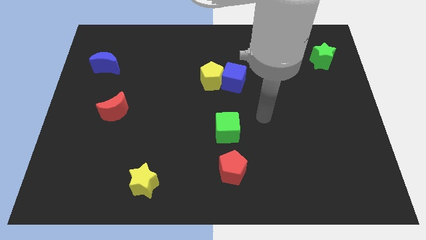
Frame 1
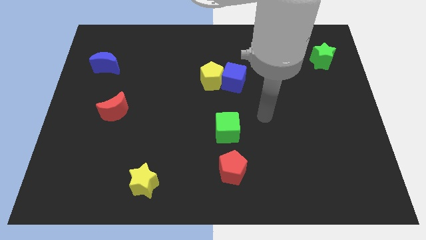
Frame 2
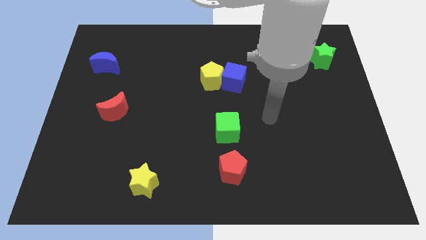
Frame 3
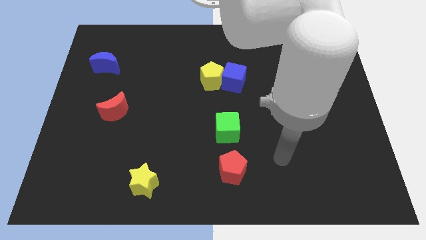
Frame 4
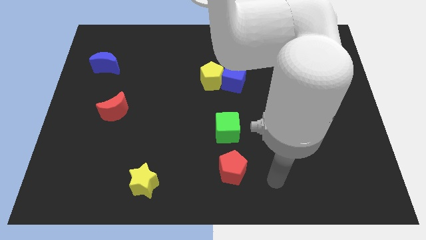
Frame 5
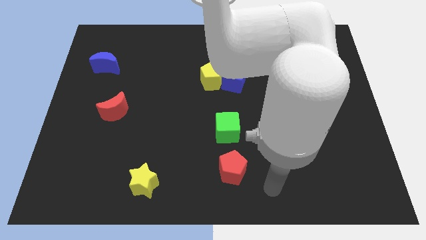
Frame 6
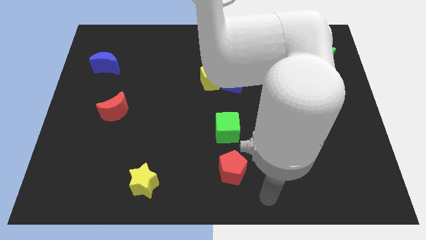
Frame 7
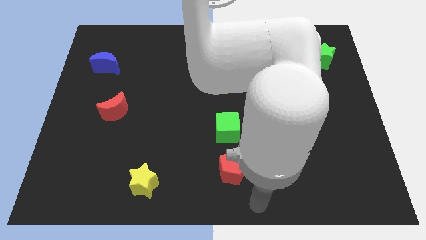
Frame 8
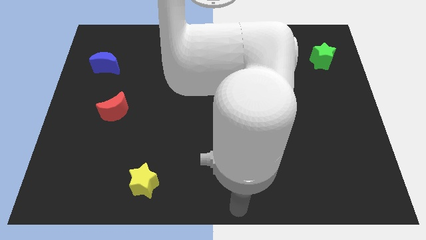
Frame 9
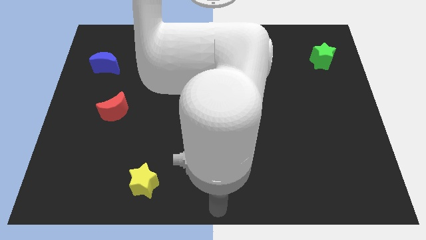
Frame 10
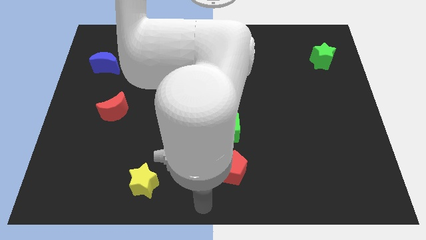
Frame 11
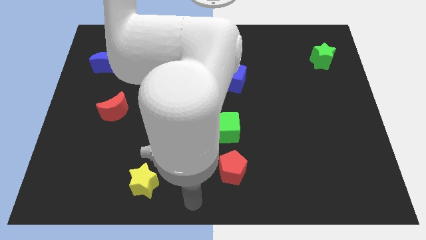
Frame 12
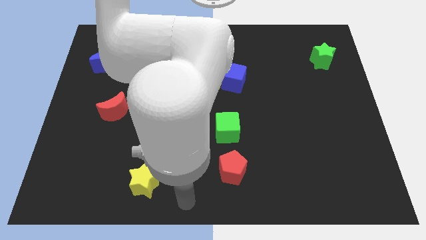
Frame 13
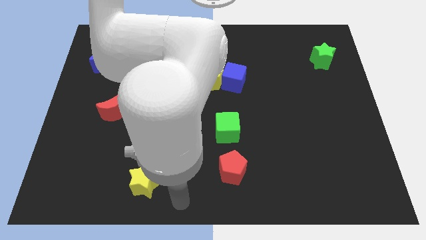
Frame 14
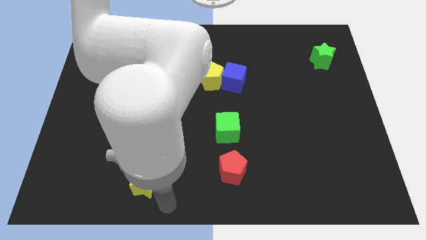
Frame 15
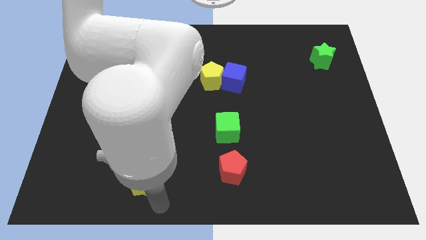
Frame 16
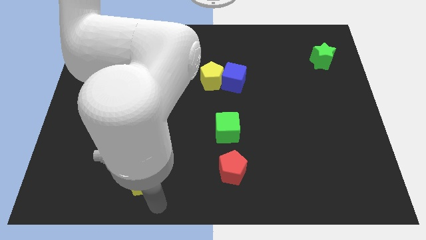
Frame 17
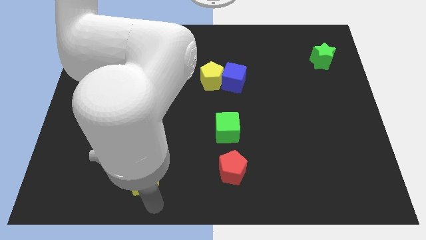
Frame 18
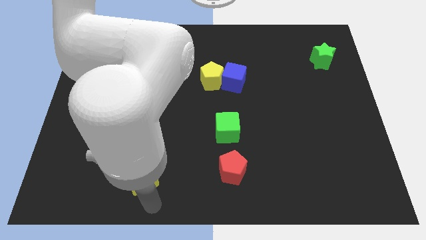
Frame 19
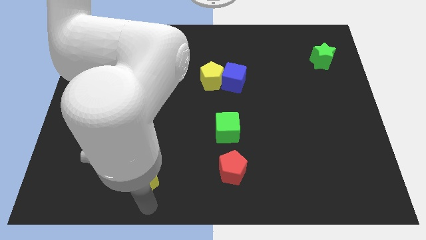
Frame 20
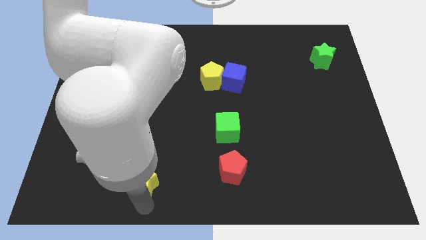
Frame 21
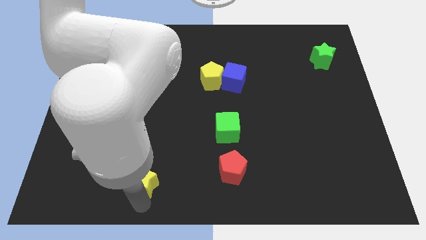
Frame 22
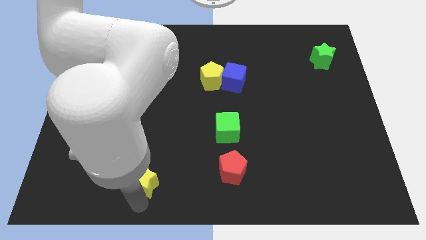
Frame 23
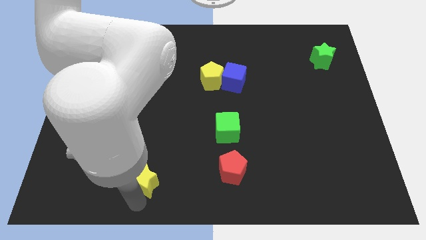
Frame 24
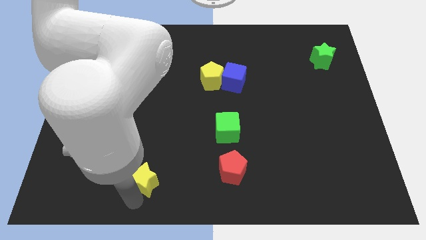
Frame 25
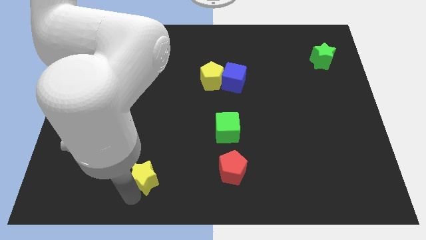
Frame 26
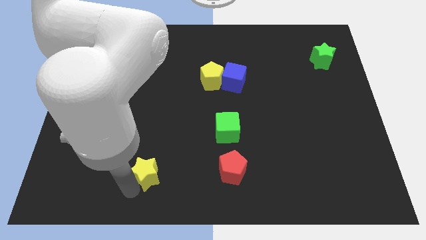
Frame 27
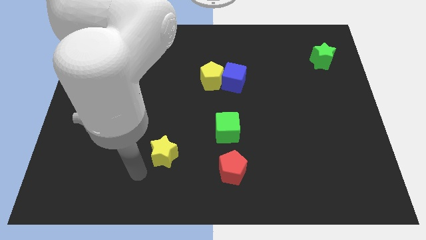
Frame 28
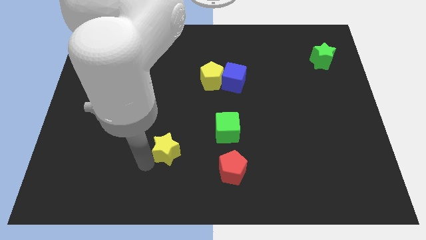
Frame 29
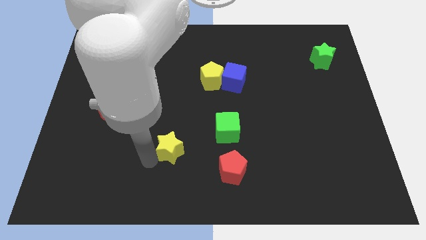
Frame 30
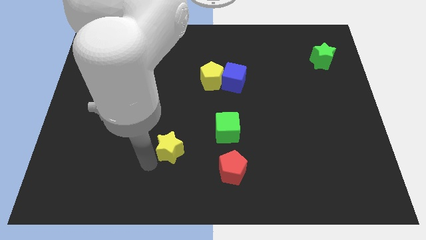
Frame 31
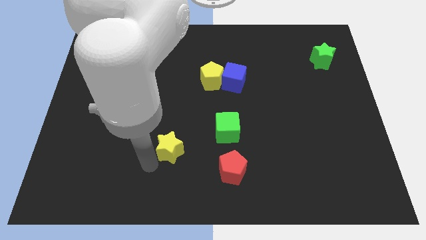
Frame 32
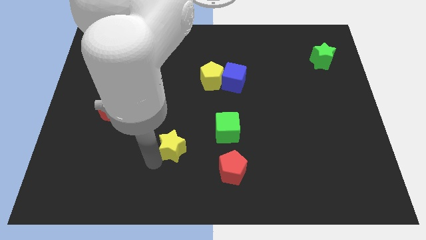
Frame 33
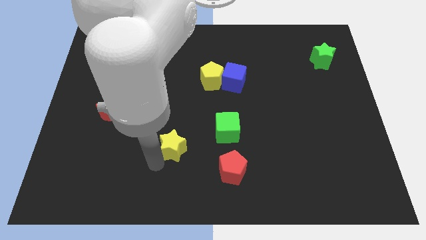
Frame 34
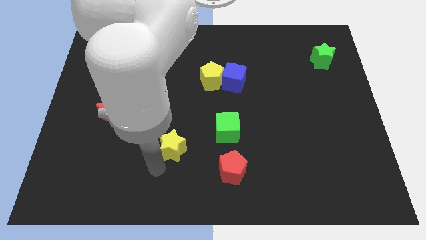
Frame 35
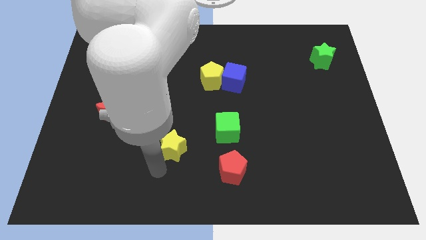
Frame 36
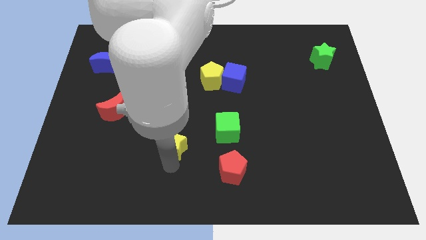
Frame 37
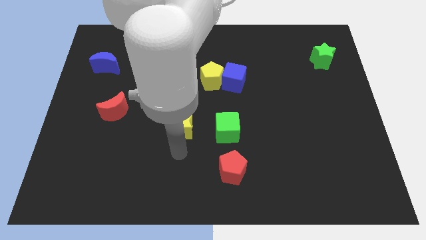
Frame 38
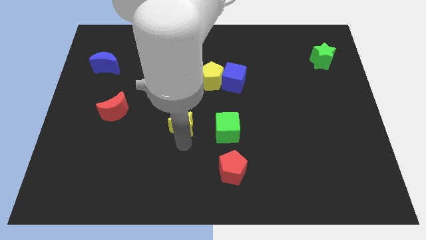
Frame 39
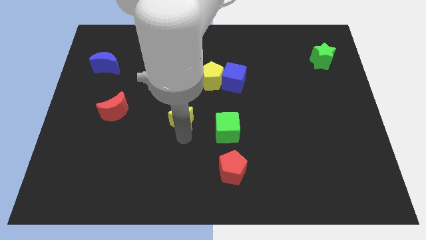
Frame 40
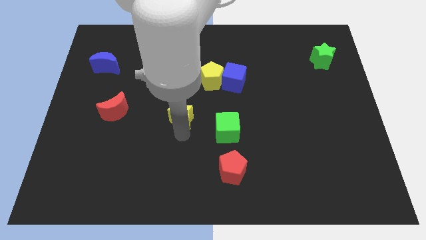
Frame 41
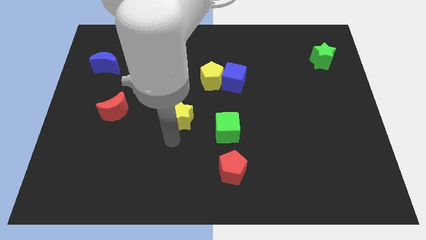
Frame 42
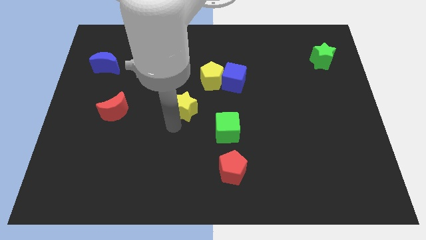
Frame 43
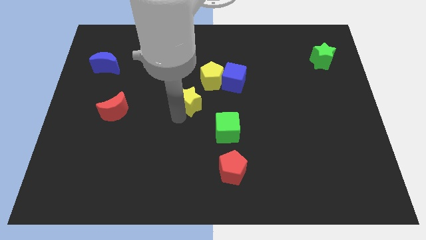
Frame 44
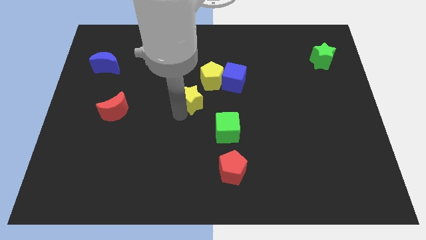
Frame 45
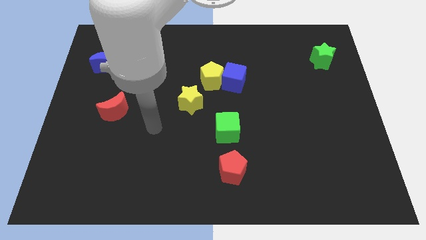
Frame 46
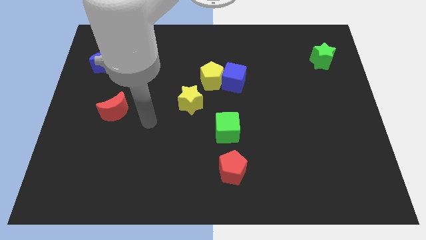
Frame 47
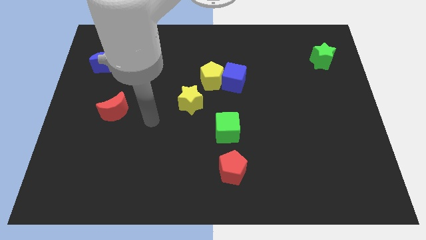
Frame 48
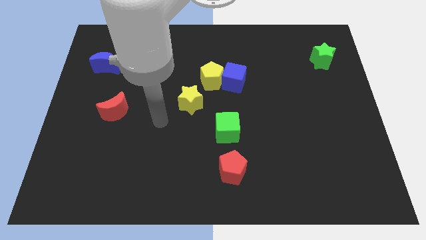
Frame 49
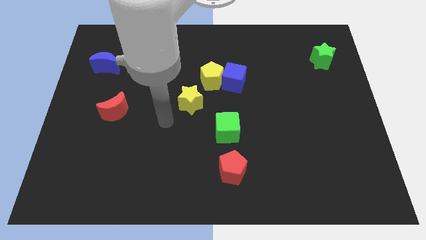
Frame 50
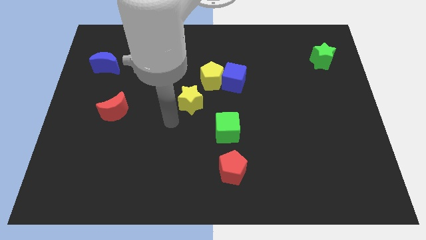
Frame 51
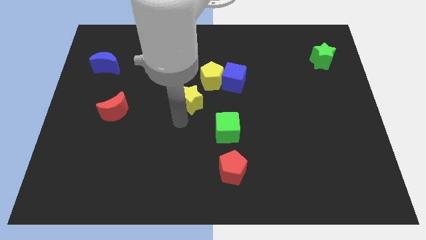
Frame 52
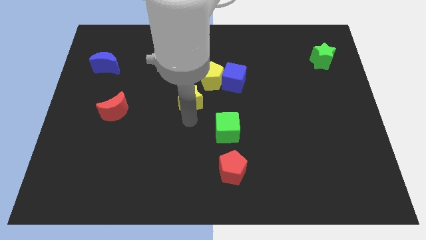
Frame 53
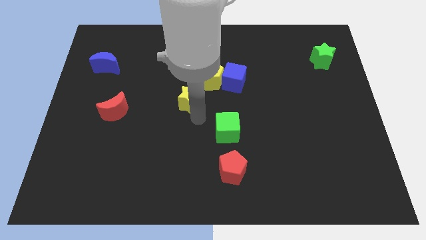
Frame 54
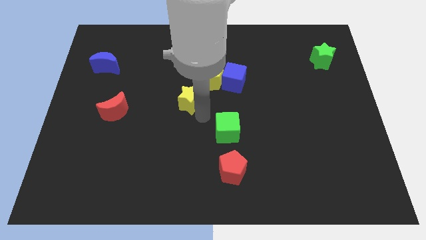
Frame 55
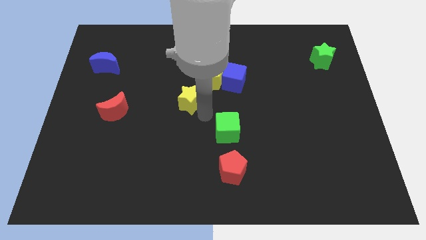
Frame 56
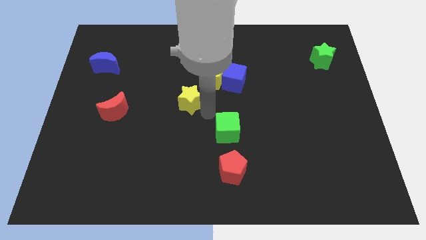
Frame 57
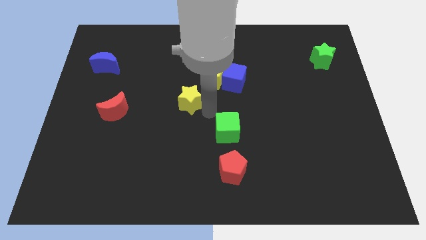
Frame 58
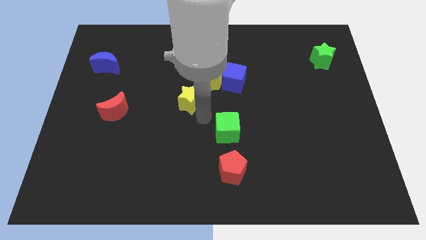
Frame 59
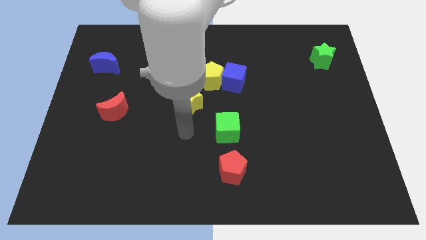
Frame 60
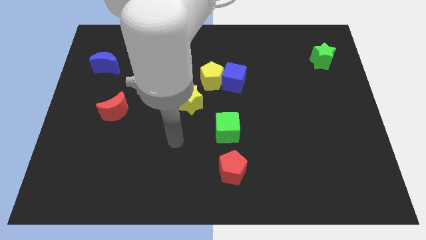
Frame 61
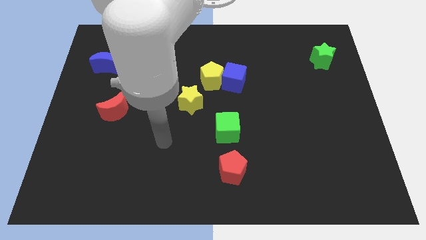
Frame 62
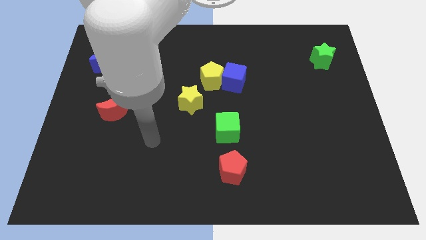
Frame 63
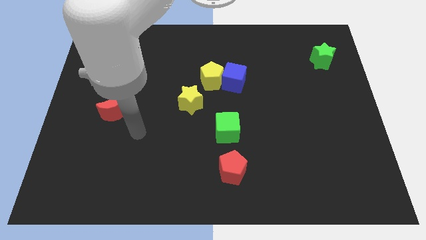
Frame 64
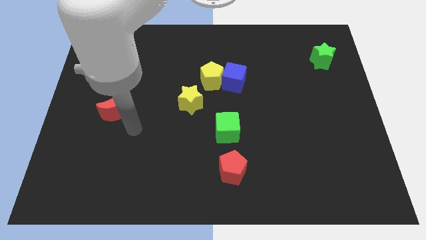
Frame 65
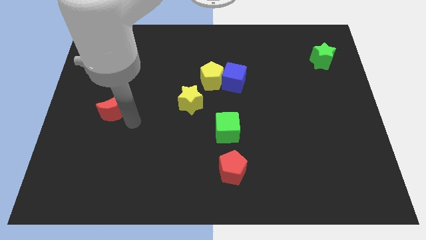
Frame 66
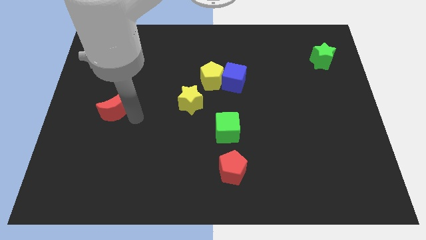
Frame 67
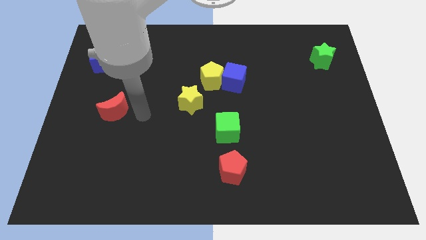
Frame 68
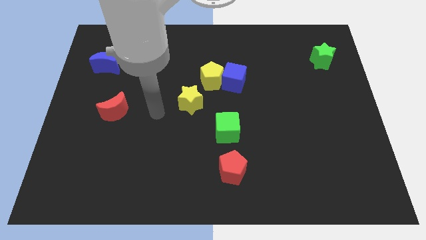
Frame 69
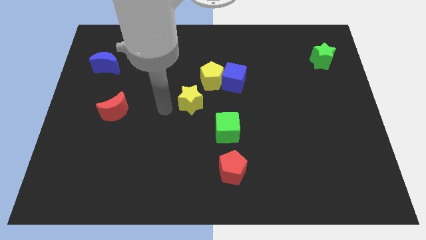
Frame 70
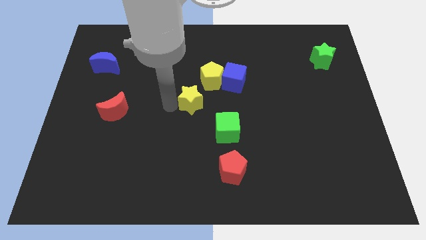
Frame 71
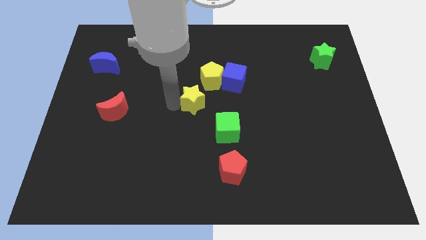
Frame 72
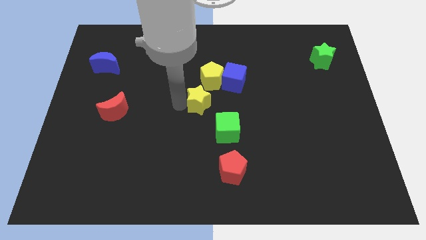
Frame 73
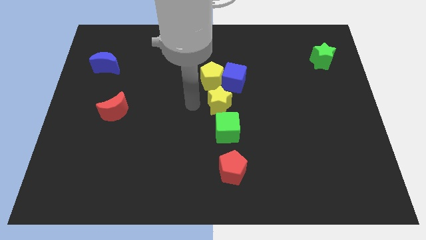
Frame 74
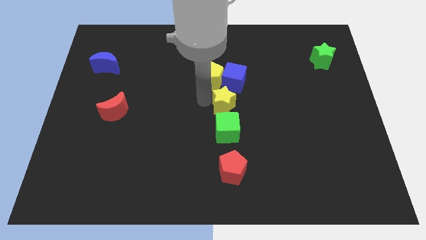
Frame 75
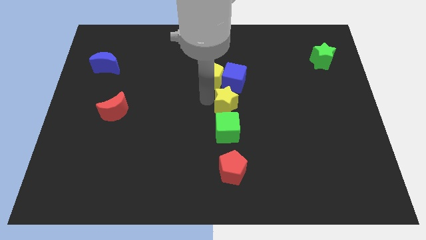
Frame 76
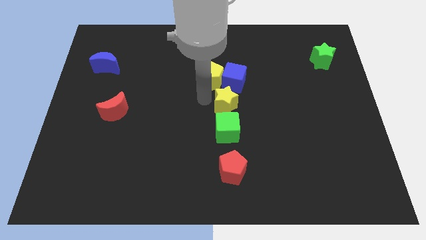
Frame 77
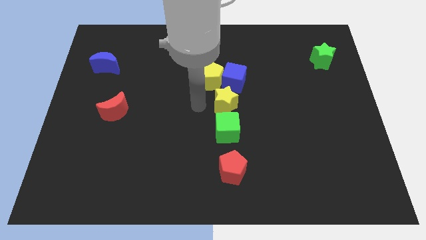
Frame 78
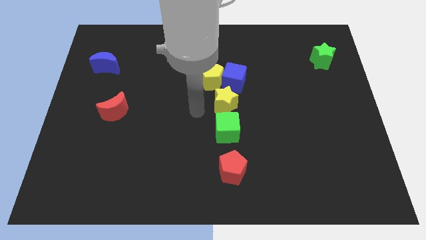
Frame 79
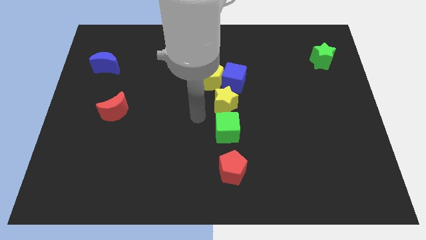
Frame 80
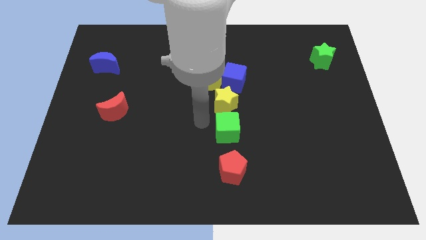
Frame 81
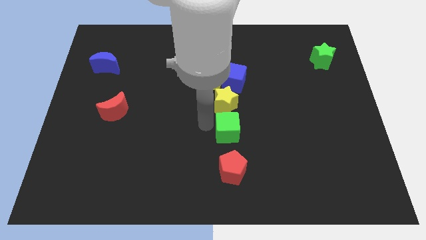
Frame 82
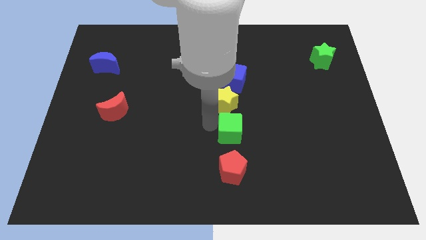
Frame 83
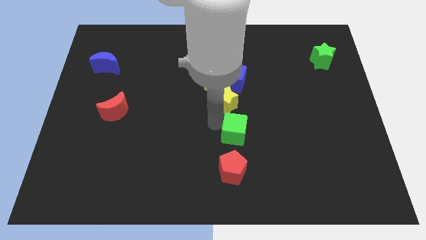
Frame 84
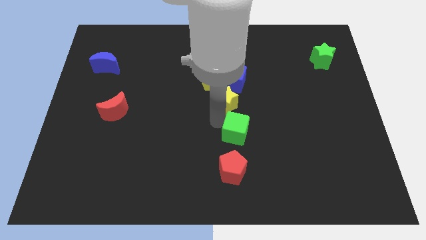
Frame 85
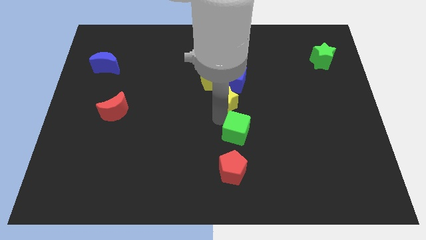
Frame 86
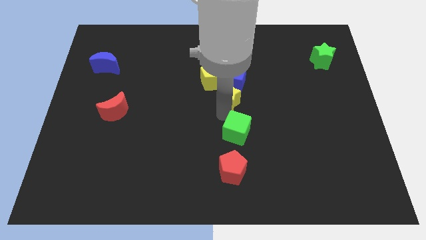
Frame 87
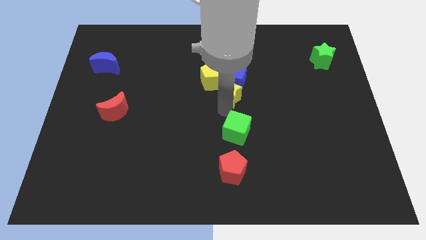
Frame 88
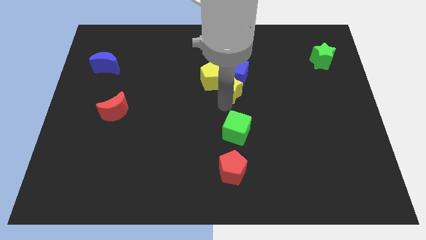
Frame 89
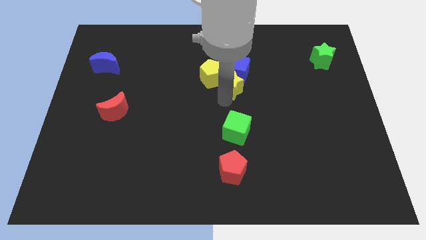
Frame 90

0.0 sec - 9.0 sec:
push the yellow star close to the blue cube
